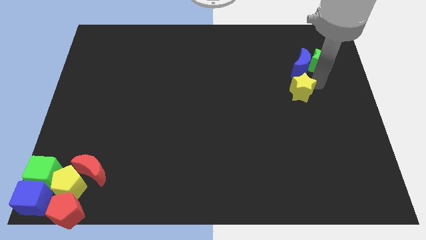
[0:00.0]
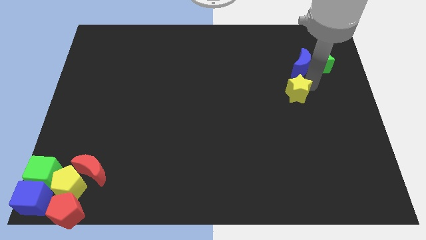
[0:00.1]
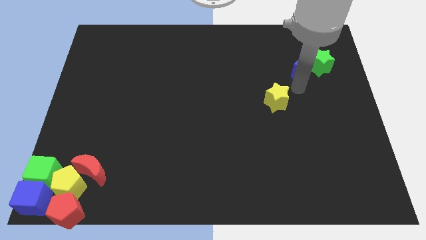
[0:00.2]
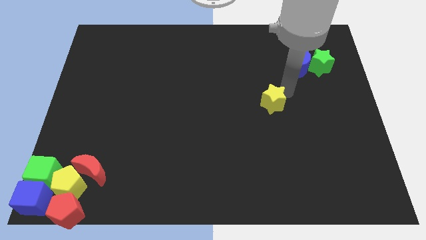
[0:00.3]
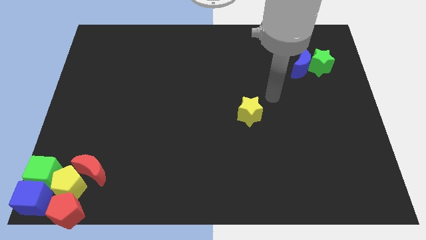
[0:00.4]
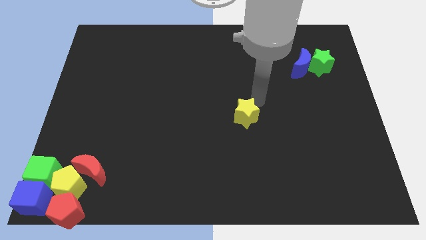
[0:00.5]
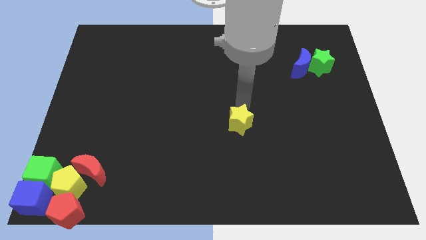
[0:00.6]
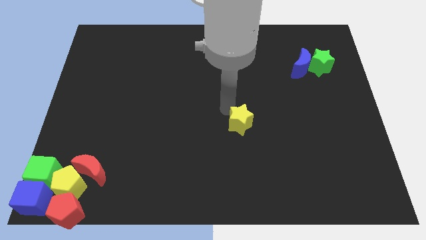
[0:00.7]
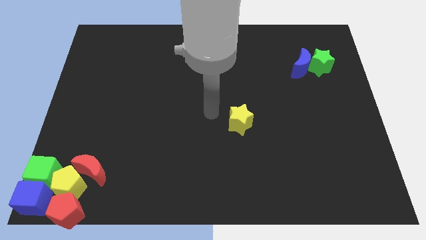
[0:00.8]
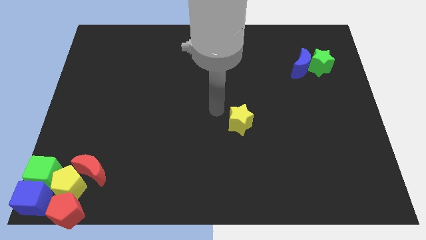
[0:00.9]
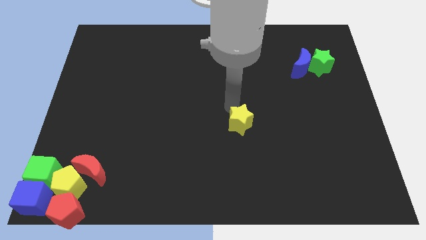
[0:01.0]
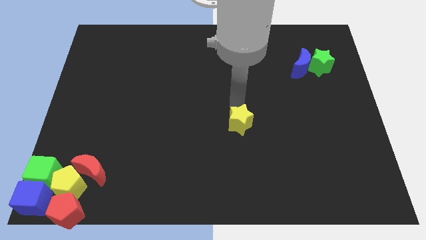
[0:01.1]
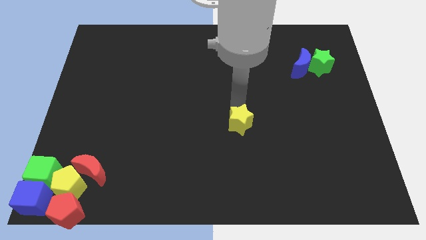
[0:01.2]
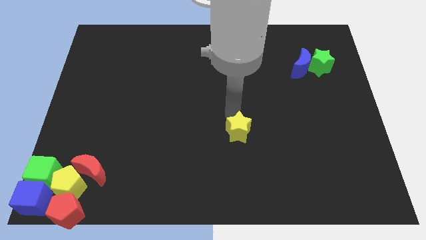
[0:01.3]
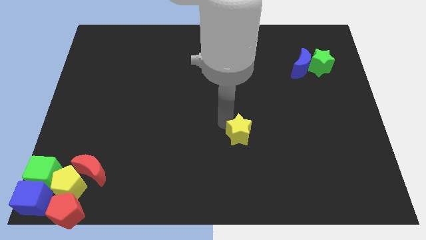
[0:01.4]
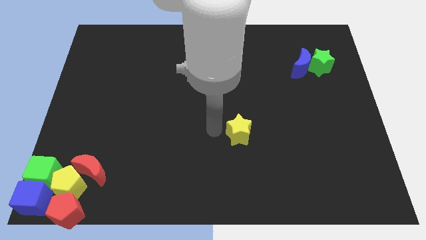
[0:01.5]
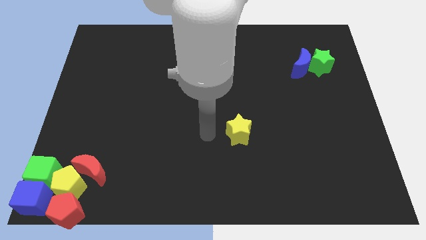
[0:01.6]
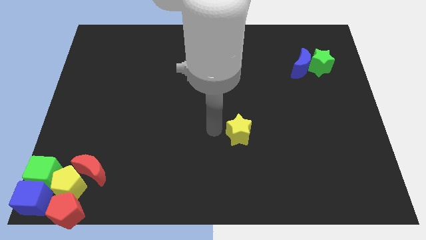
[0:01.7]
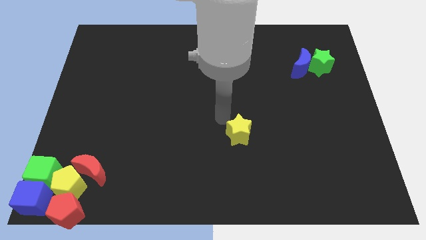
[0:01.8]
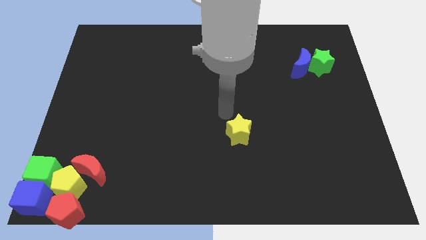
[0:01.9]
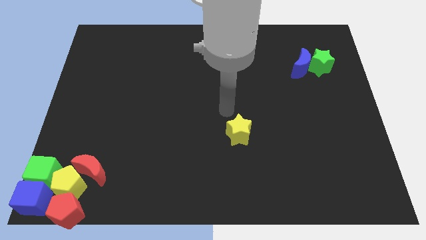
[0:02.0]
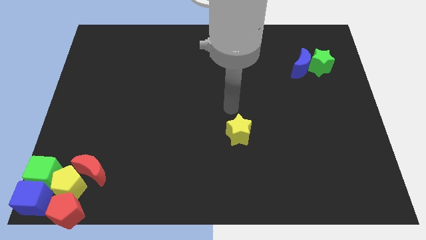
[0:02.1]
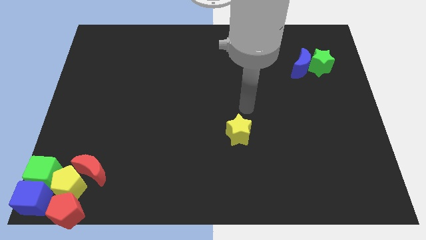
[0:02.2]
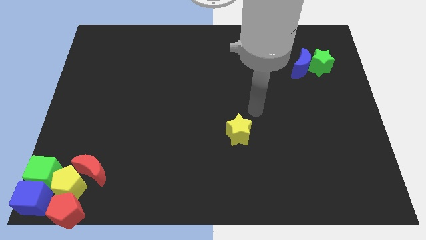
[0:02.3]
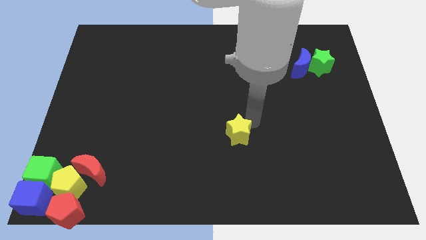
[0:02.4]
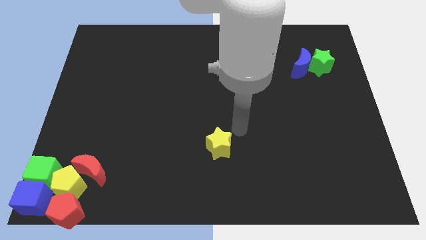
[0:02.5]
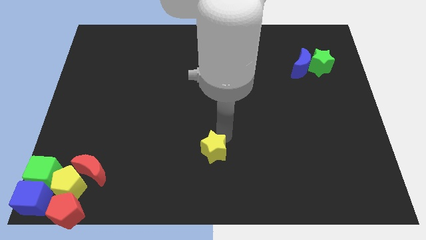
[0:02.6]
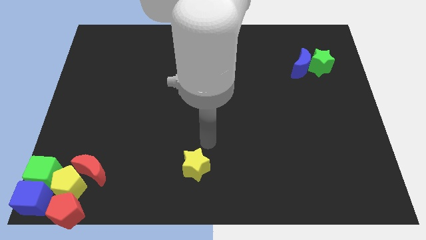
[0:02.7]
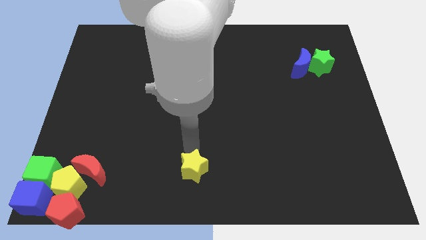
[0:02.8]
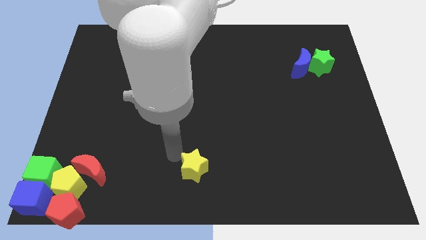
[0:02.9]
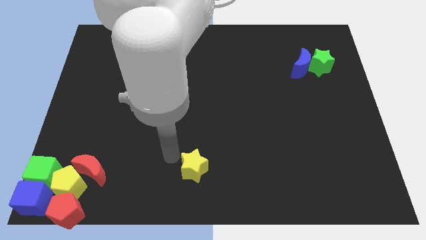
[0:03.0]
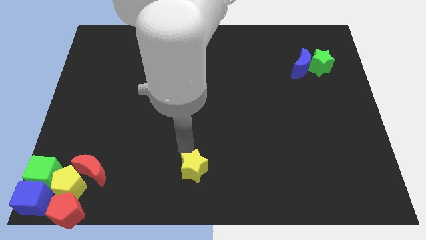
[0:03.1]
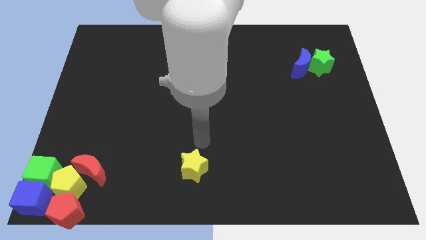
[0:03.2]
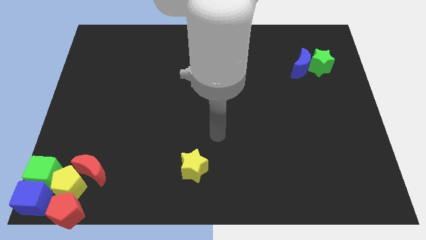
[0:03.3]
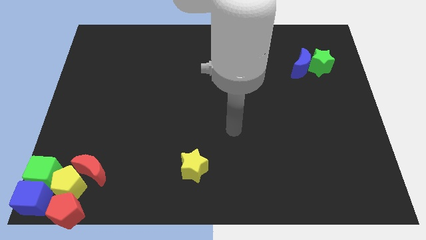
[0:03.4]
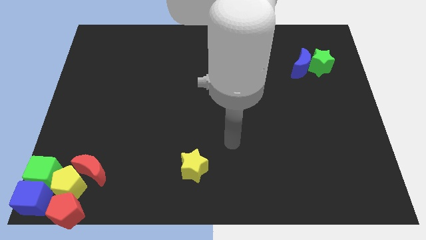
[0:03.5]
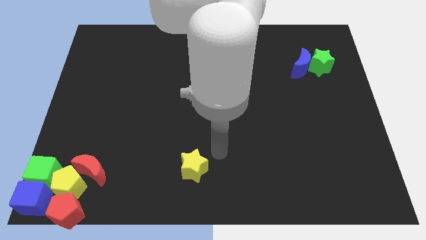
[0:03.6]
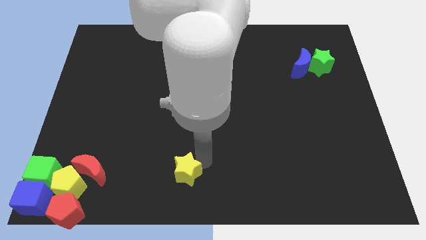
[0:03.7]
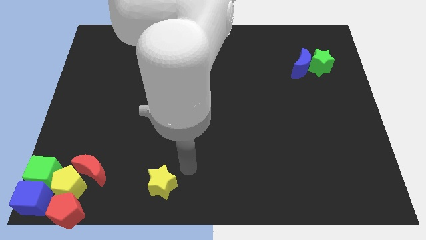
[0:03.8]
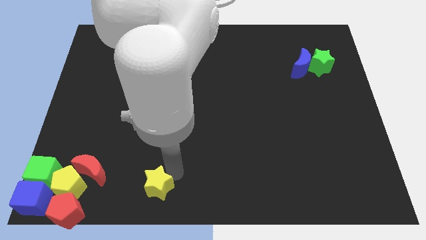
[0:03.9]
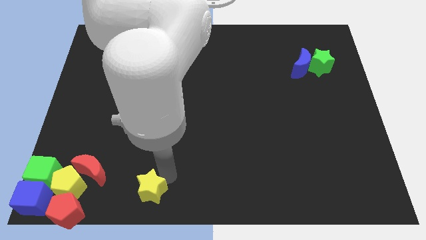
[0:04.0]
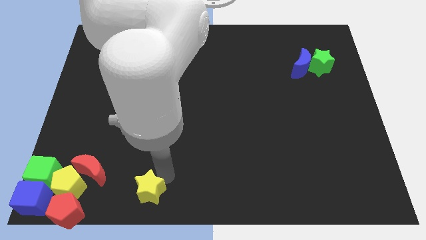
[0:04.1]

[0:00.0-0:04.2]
push the yellow star towards the bottom left of the board

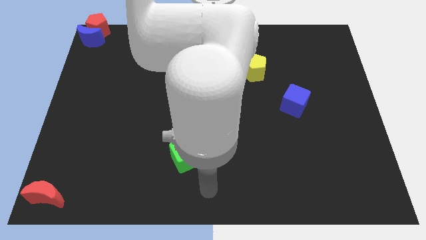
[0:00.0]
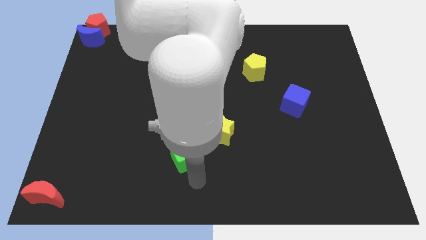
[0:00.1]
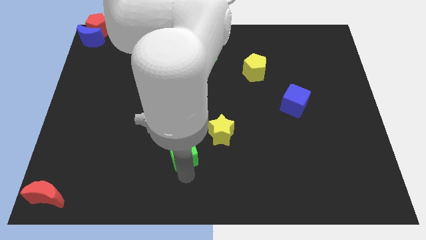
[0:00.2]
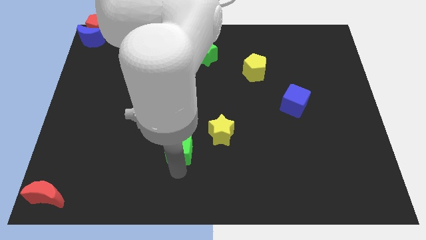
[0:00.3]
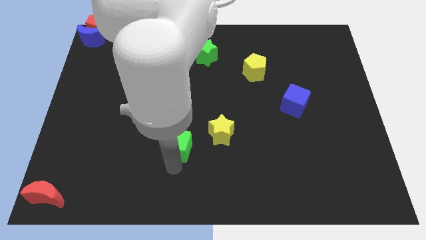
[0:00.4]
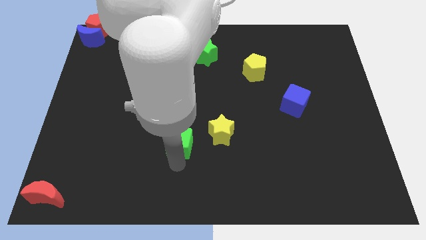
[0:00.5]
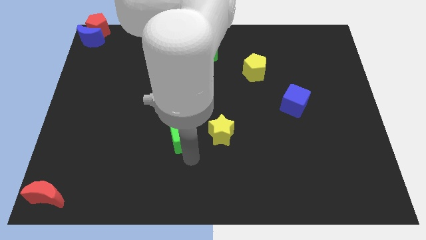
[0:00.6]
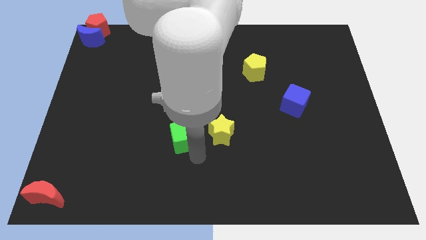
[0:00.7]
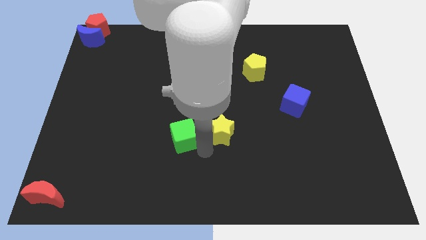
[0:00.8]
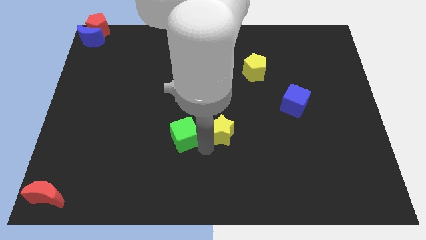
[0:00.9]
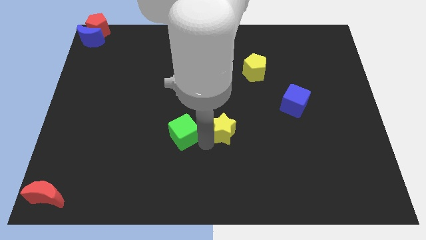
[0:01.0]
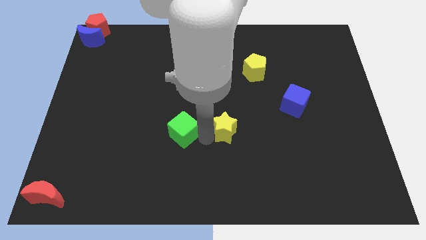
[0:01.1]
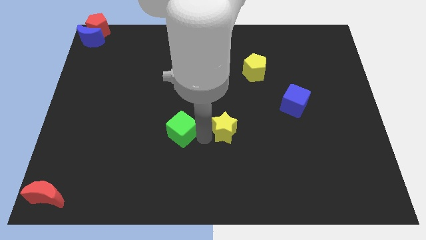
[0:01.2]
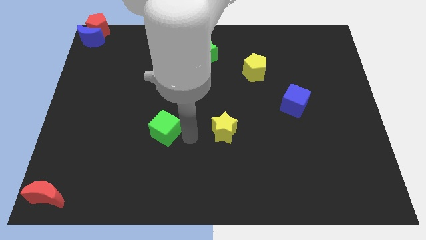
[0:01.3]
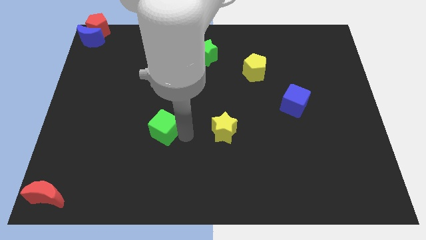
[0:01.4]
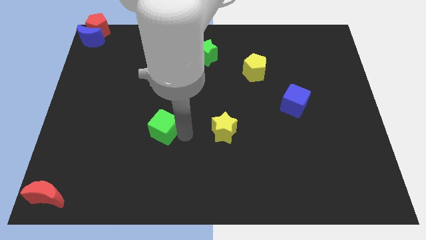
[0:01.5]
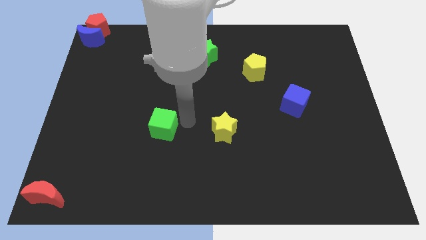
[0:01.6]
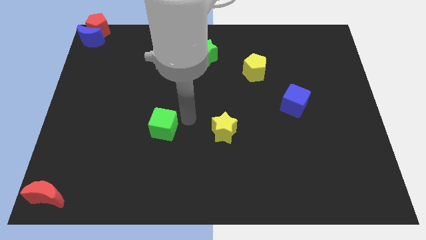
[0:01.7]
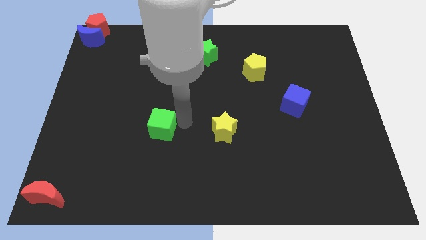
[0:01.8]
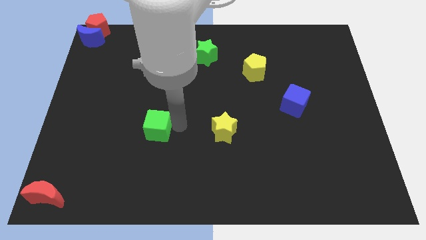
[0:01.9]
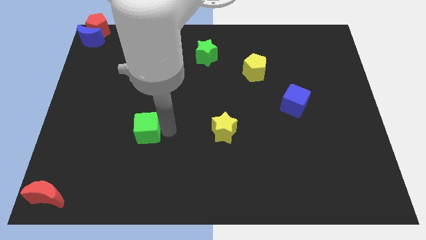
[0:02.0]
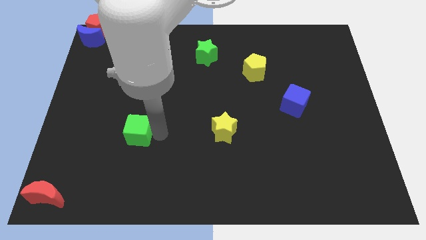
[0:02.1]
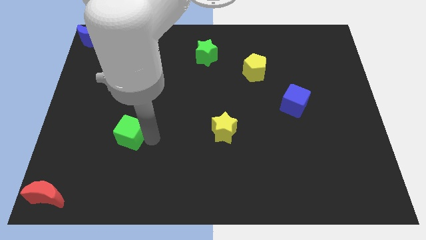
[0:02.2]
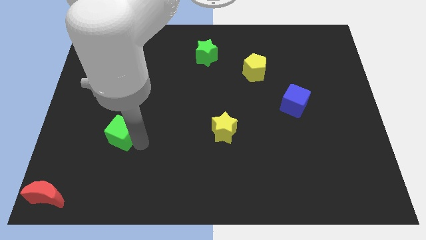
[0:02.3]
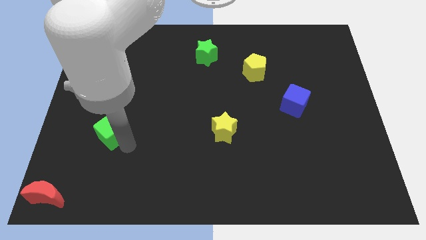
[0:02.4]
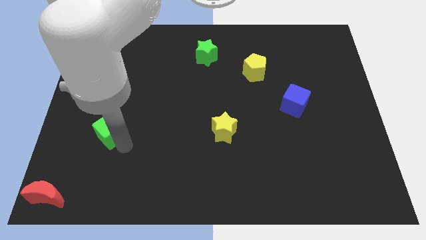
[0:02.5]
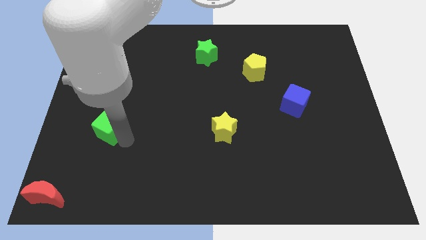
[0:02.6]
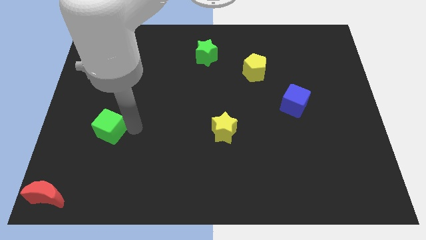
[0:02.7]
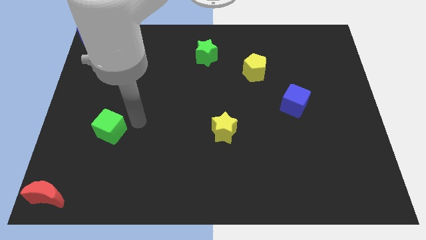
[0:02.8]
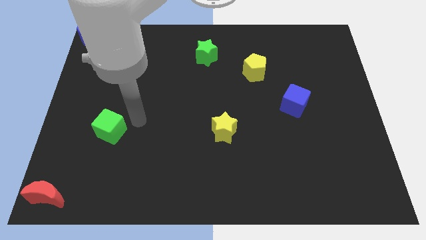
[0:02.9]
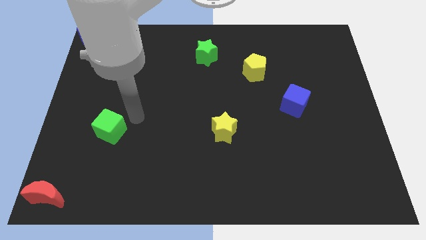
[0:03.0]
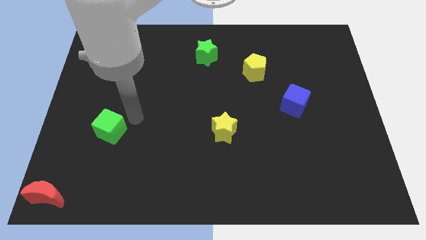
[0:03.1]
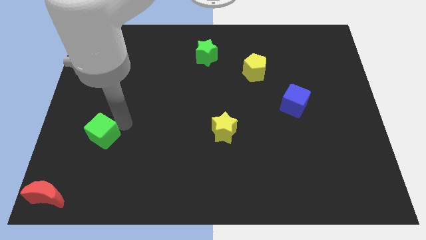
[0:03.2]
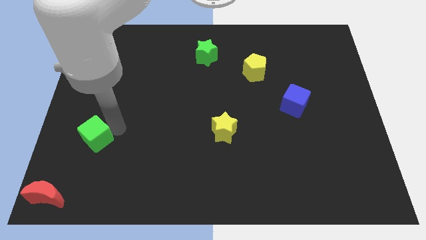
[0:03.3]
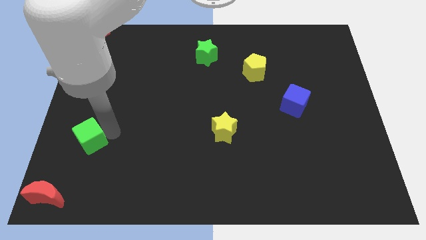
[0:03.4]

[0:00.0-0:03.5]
push the green cube to the left

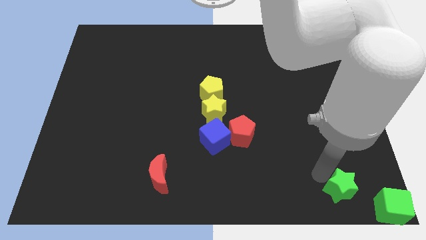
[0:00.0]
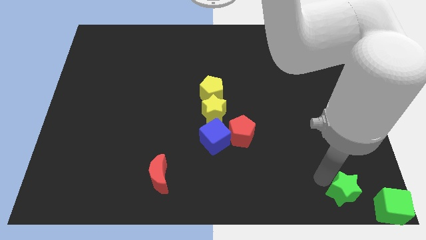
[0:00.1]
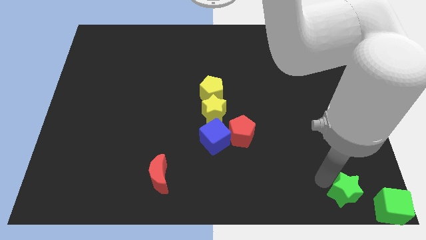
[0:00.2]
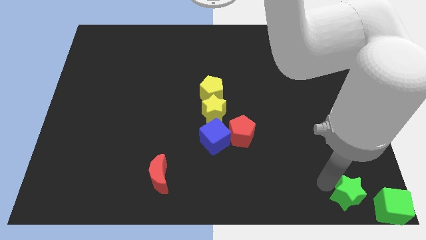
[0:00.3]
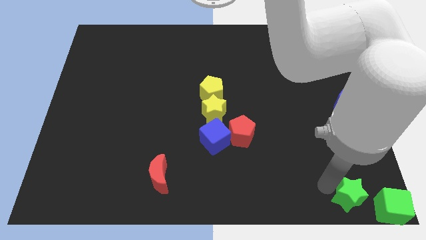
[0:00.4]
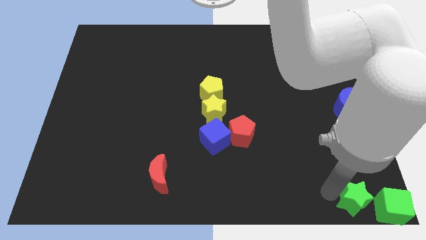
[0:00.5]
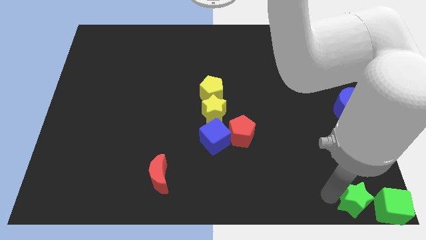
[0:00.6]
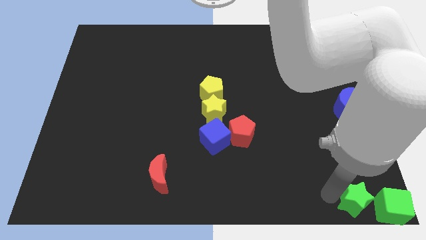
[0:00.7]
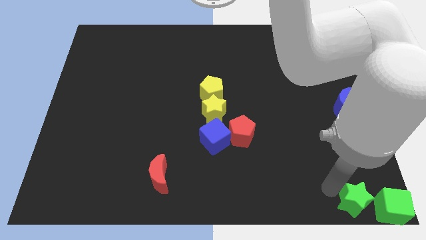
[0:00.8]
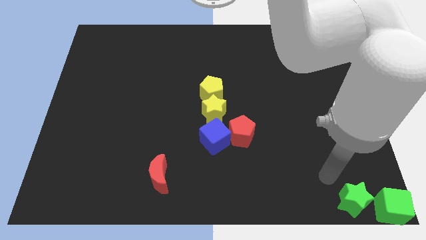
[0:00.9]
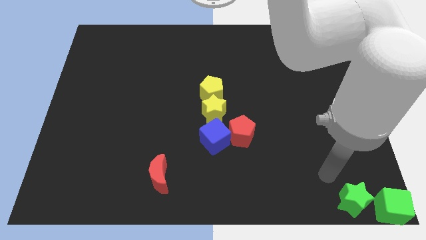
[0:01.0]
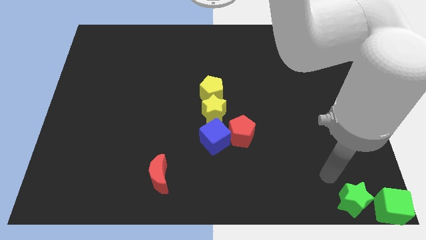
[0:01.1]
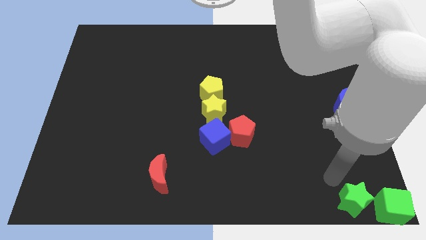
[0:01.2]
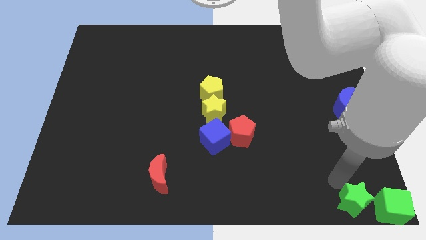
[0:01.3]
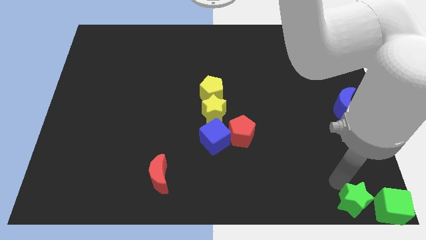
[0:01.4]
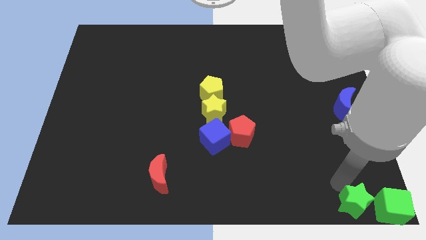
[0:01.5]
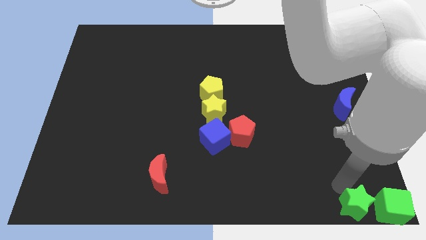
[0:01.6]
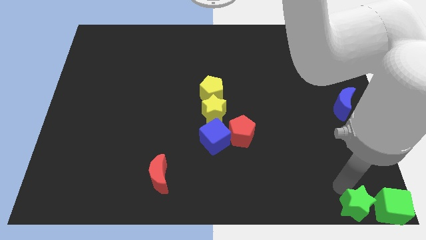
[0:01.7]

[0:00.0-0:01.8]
place the green star left to the green cube
